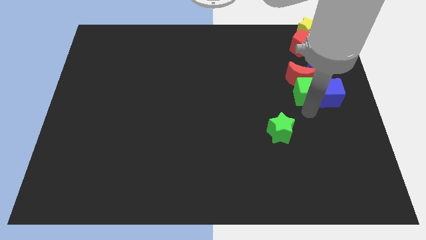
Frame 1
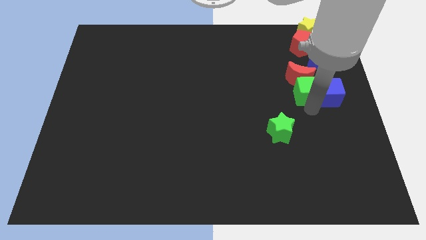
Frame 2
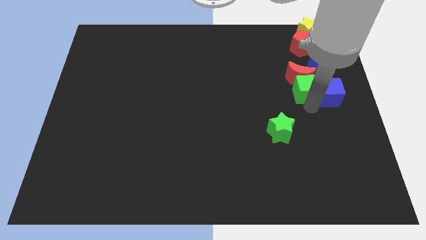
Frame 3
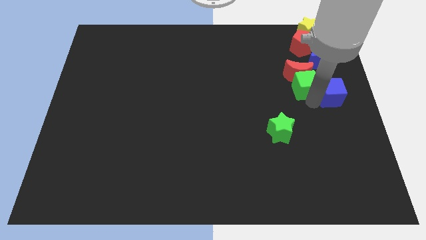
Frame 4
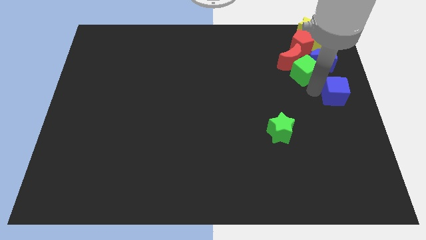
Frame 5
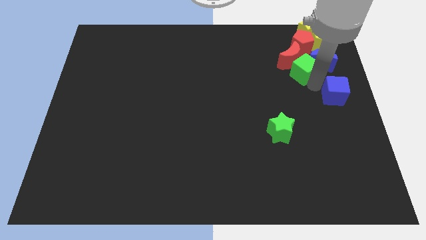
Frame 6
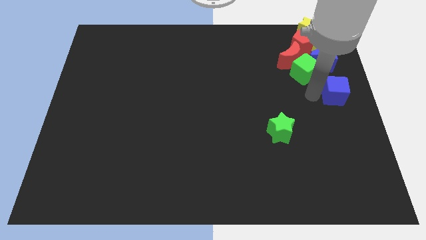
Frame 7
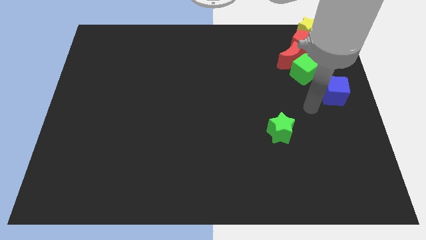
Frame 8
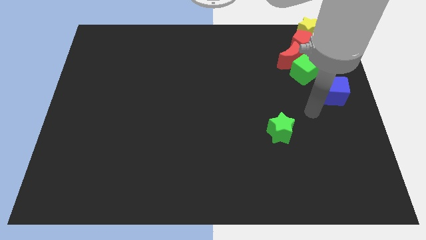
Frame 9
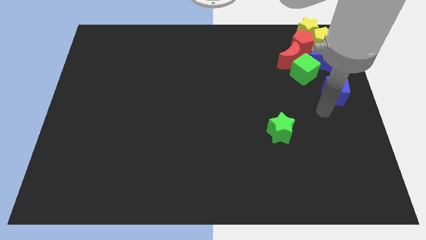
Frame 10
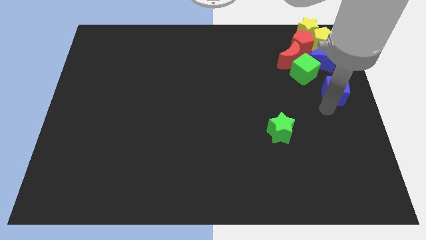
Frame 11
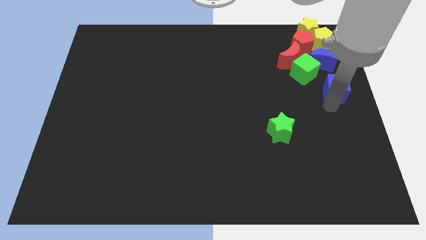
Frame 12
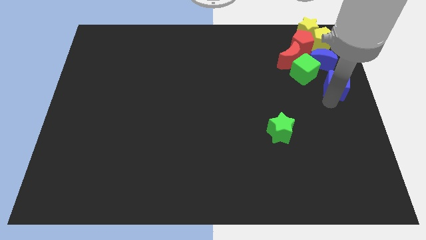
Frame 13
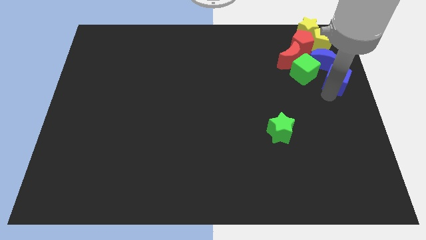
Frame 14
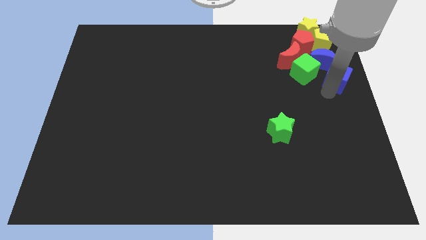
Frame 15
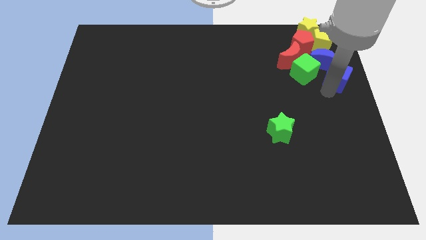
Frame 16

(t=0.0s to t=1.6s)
add the green cube to the group of blocks at the top right corner of the board

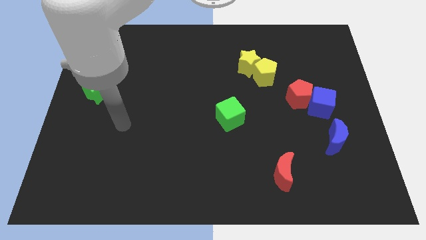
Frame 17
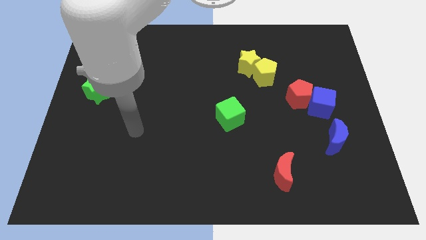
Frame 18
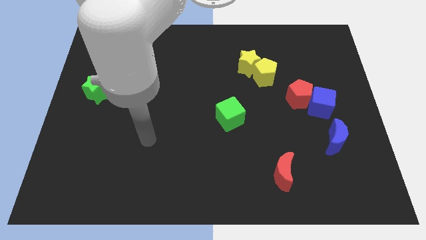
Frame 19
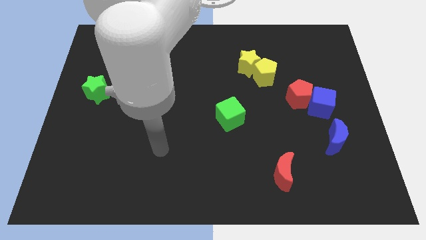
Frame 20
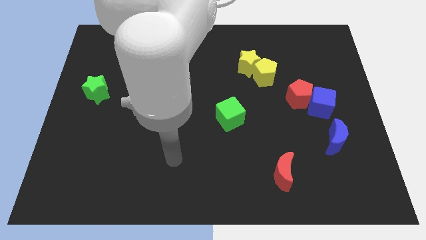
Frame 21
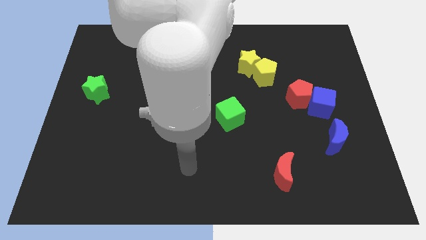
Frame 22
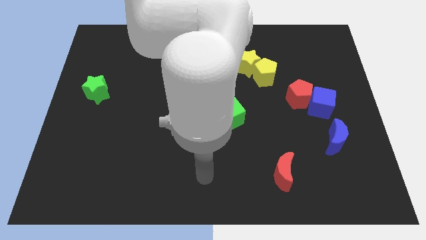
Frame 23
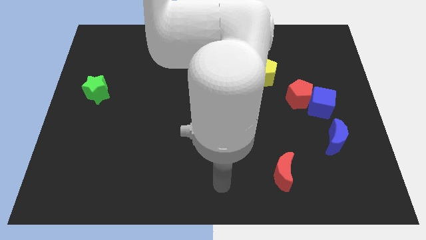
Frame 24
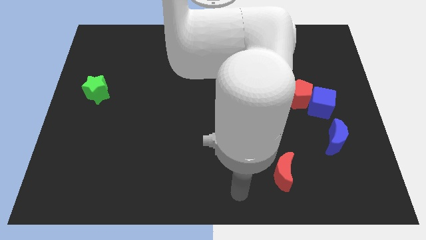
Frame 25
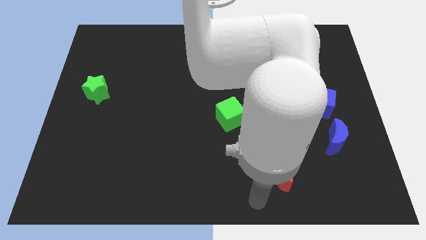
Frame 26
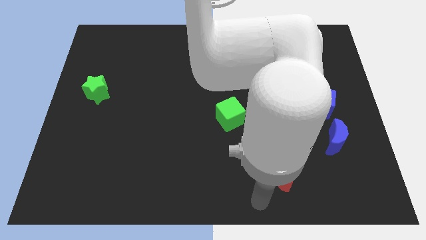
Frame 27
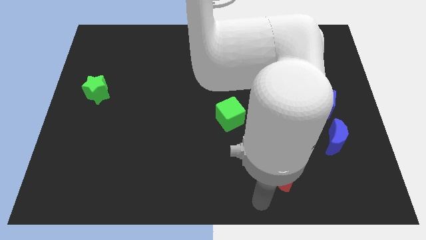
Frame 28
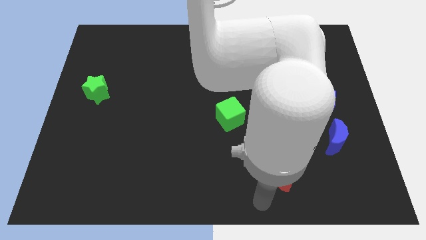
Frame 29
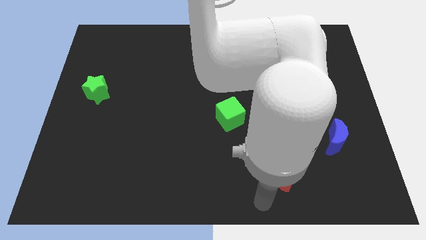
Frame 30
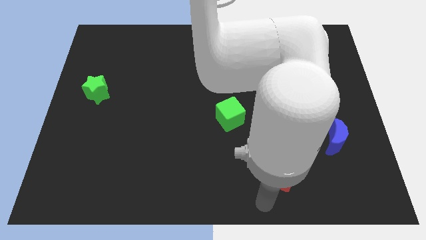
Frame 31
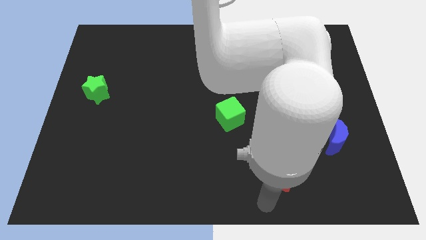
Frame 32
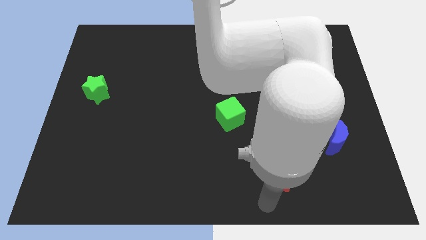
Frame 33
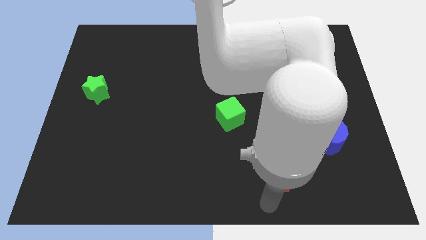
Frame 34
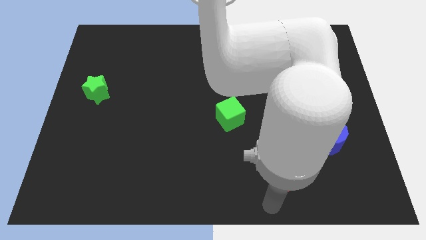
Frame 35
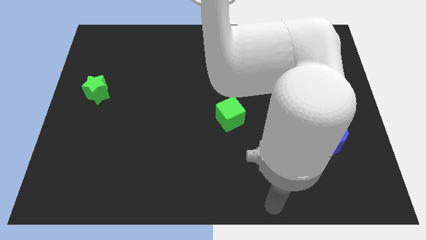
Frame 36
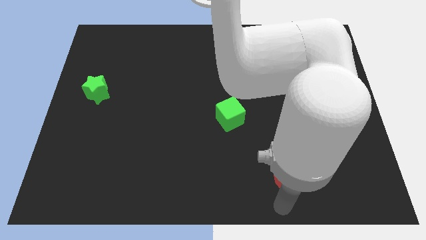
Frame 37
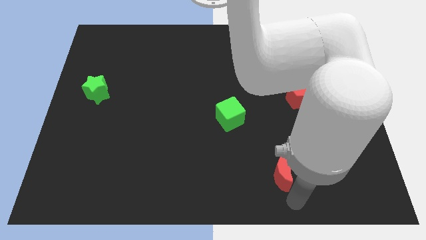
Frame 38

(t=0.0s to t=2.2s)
place your hand under the red crescent

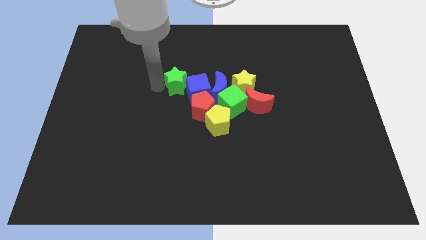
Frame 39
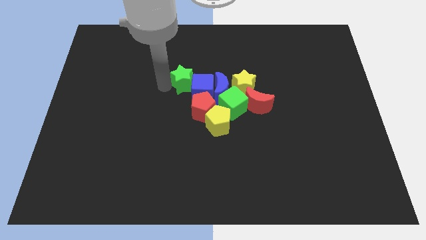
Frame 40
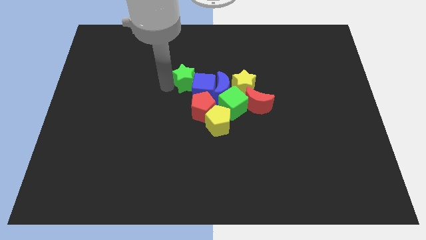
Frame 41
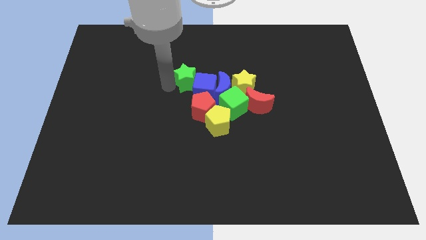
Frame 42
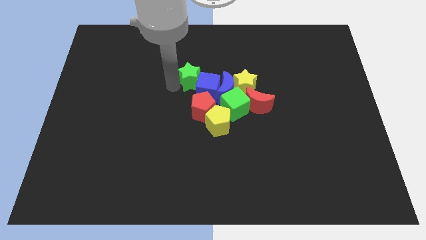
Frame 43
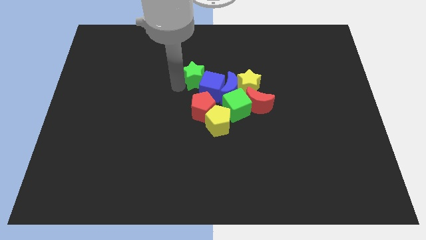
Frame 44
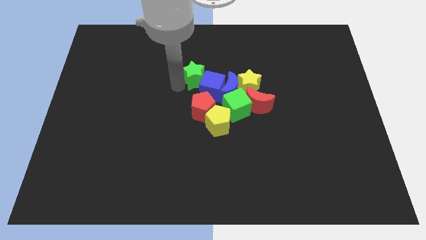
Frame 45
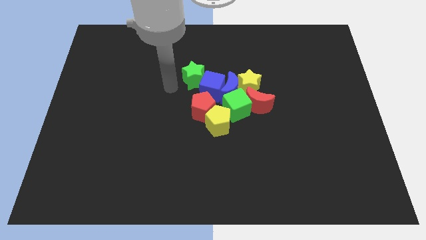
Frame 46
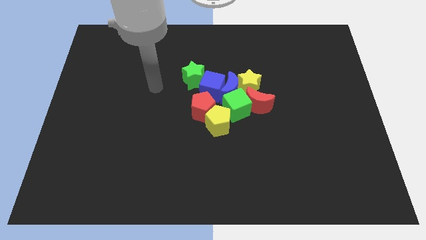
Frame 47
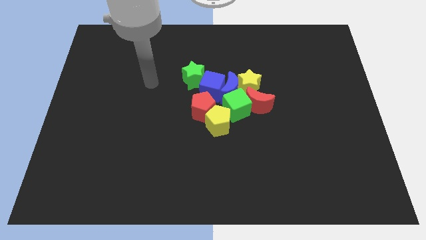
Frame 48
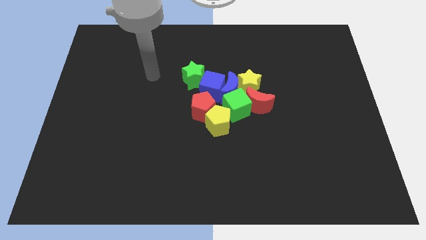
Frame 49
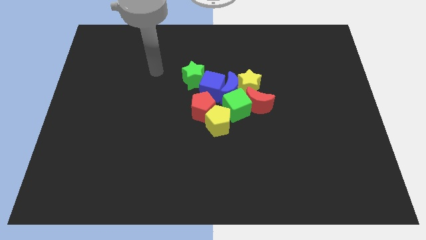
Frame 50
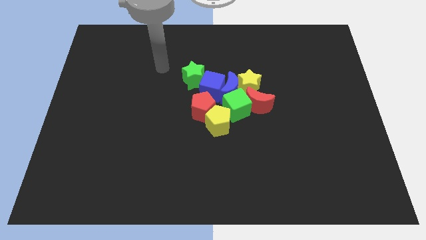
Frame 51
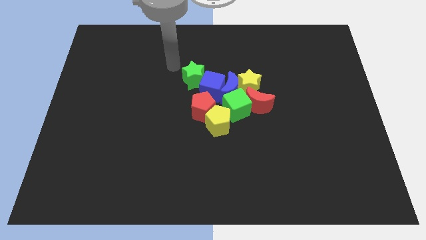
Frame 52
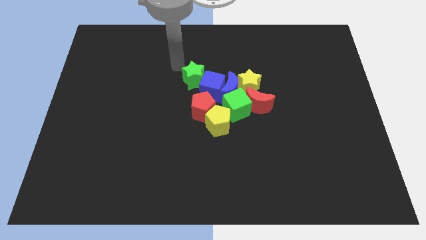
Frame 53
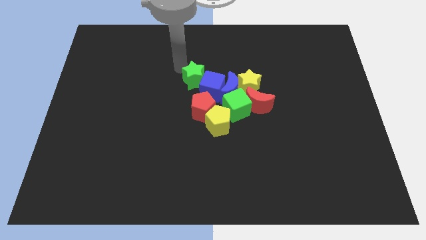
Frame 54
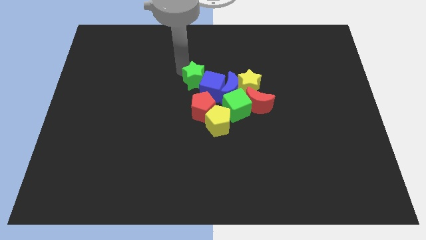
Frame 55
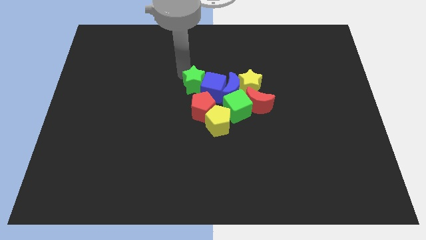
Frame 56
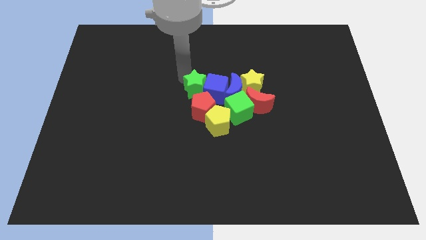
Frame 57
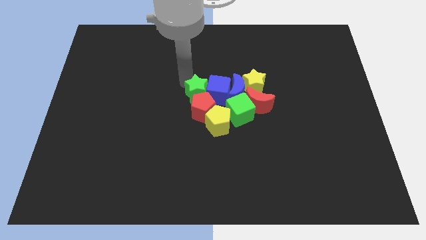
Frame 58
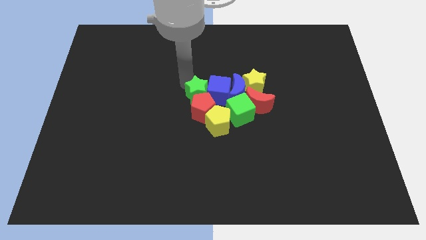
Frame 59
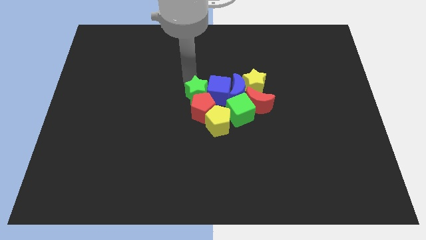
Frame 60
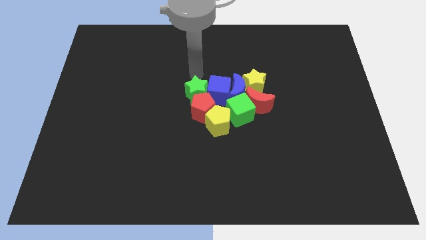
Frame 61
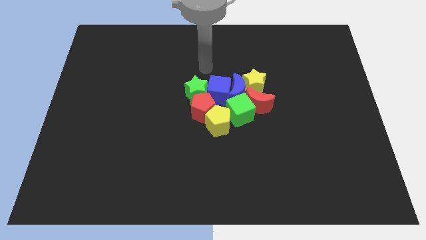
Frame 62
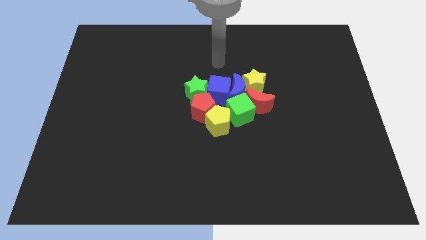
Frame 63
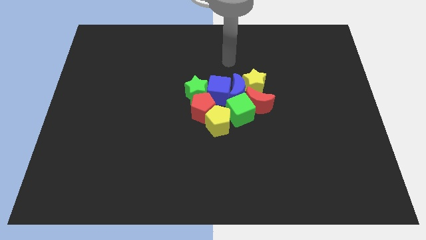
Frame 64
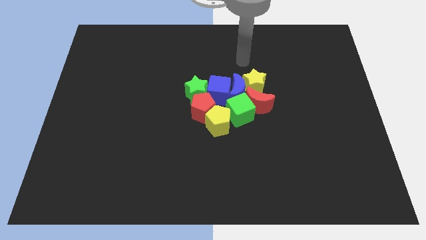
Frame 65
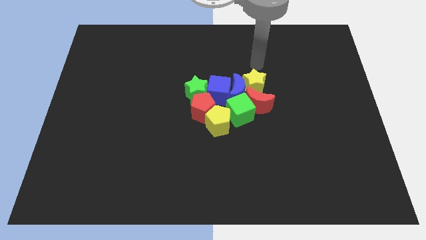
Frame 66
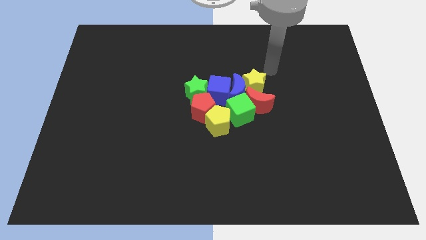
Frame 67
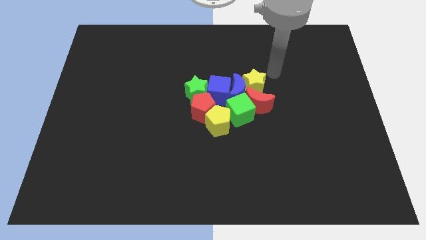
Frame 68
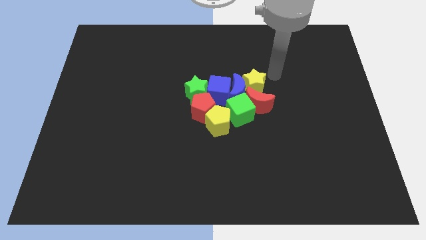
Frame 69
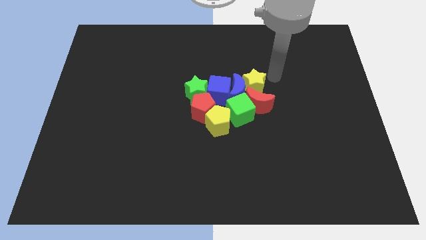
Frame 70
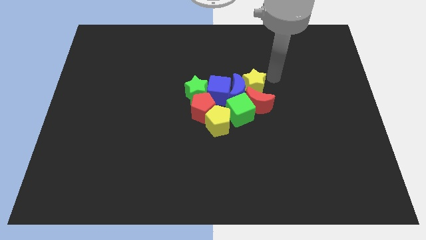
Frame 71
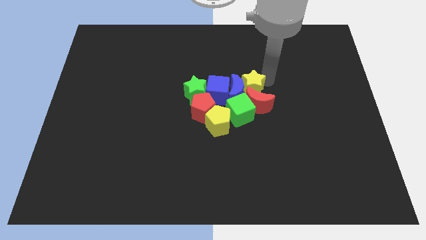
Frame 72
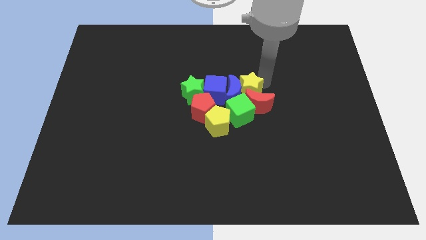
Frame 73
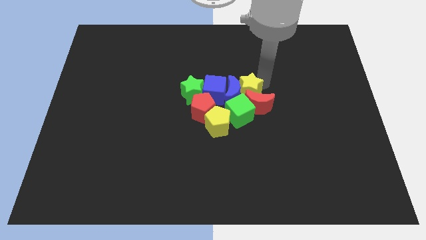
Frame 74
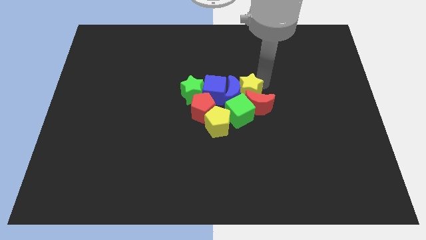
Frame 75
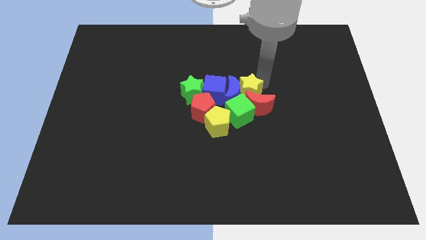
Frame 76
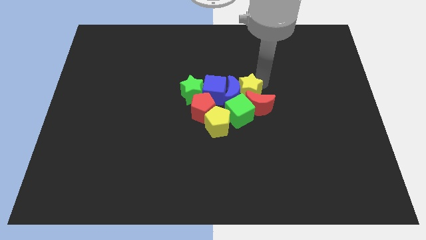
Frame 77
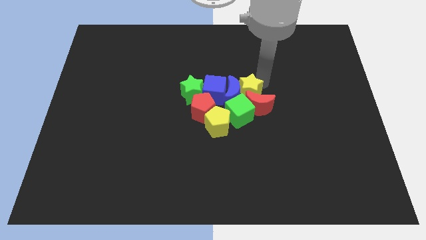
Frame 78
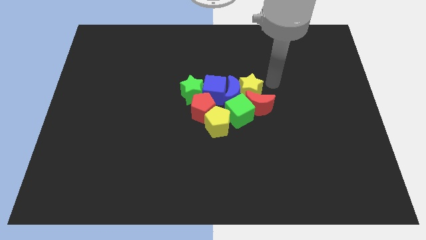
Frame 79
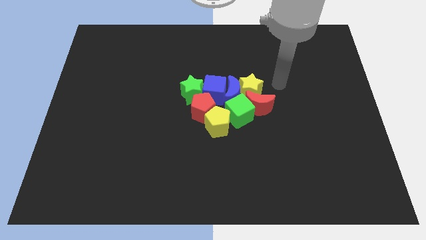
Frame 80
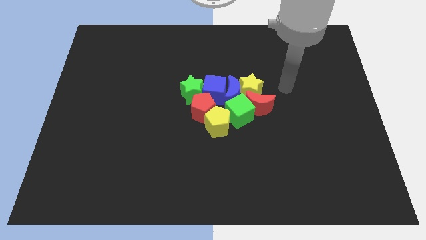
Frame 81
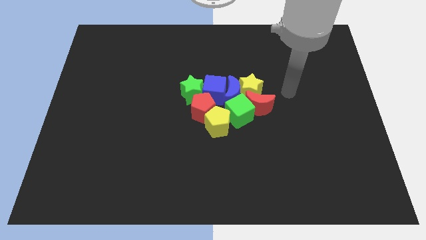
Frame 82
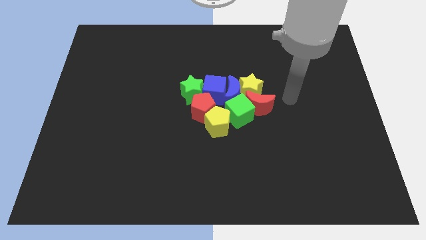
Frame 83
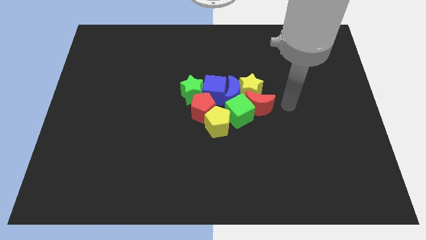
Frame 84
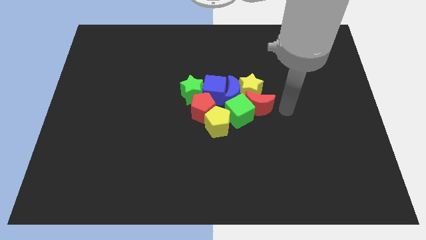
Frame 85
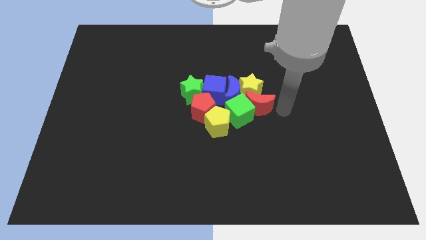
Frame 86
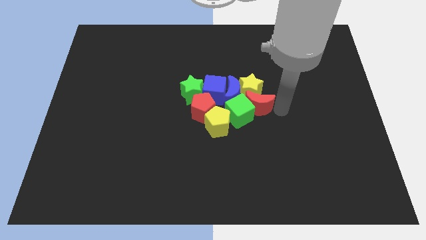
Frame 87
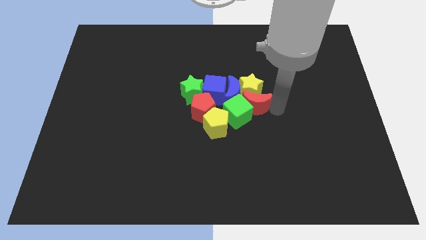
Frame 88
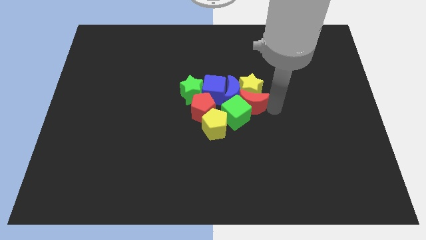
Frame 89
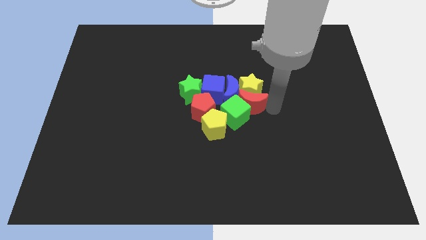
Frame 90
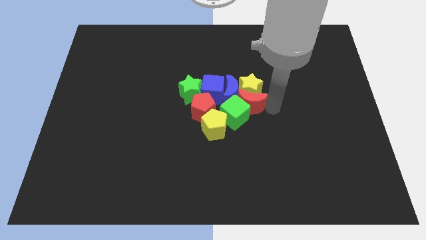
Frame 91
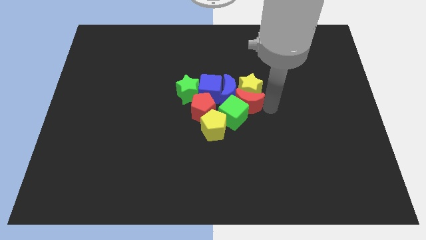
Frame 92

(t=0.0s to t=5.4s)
push a group of blocks to the center of the board
